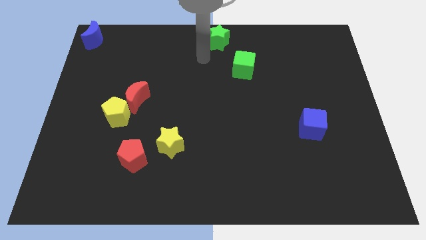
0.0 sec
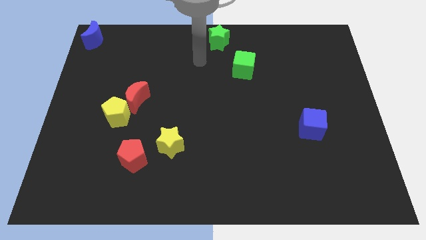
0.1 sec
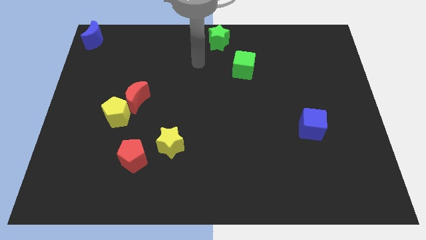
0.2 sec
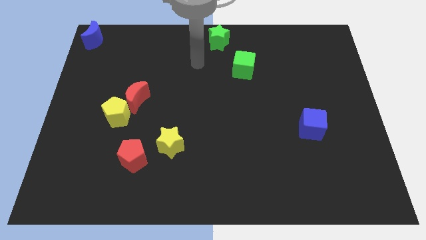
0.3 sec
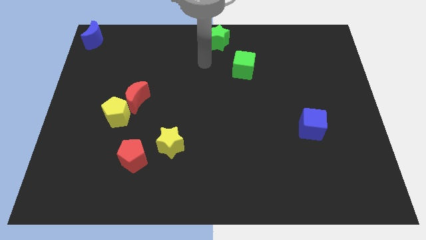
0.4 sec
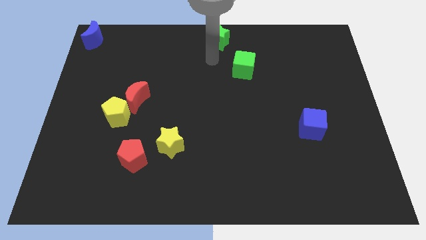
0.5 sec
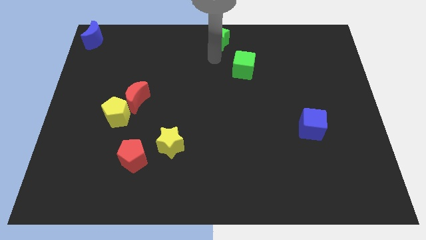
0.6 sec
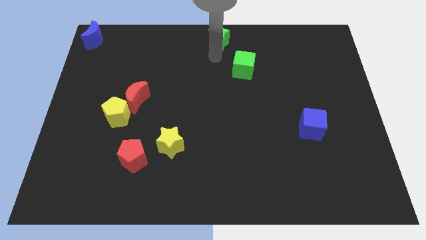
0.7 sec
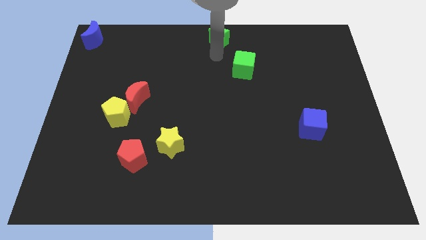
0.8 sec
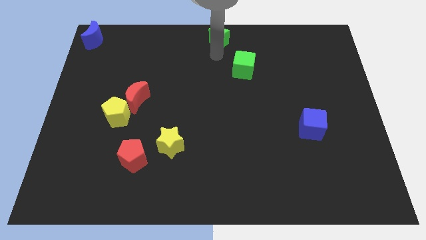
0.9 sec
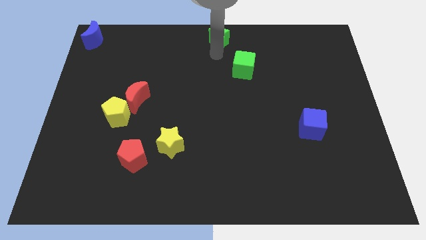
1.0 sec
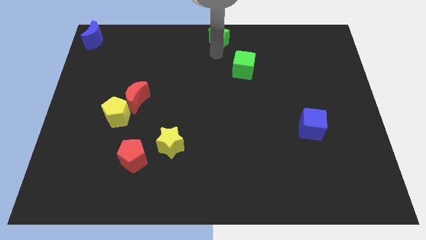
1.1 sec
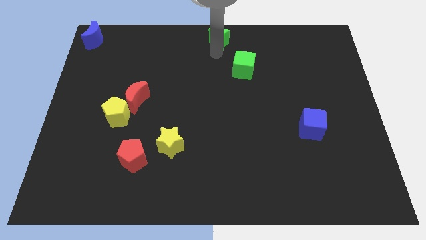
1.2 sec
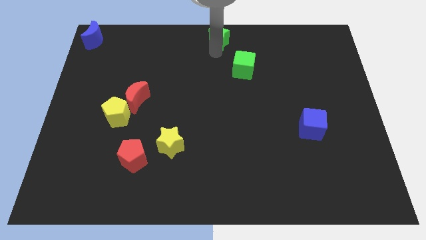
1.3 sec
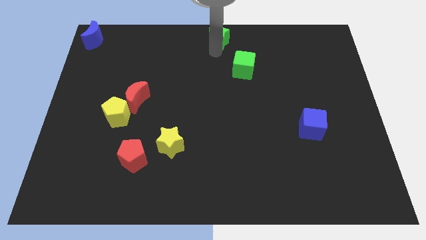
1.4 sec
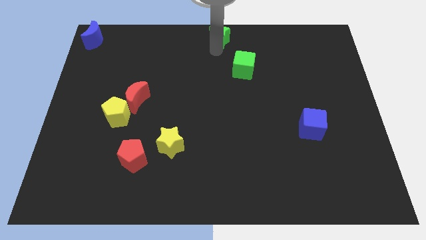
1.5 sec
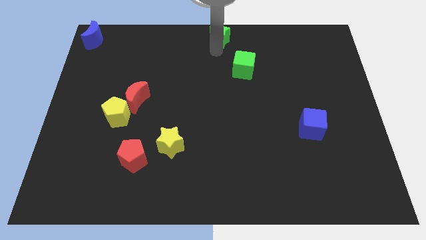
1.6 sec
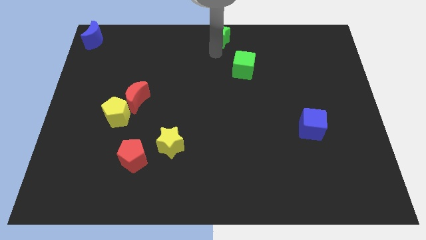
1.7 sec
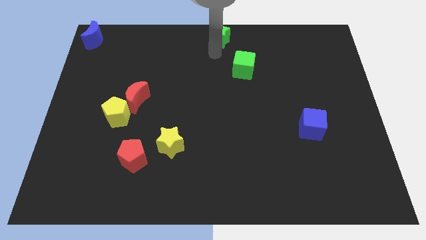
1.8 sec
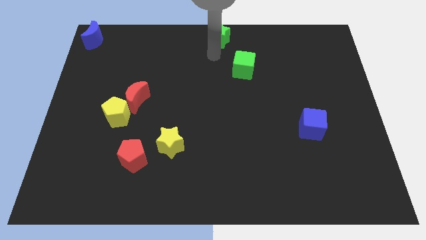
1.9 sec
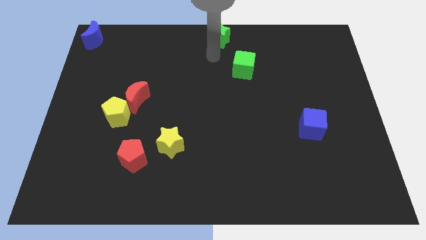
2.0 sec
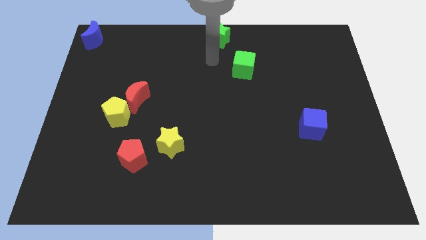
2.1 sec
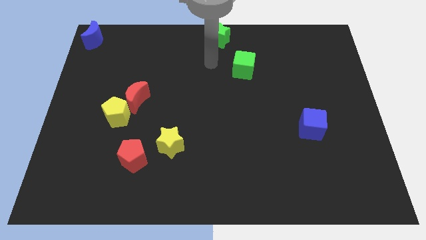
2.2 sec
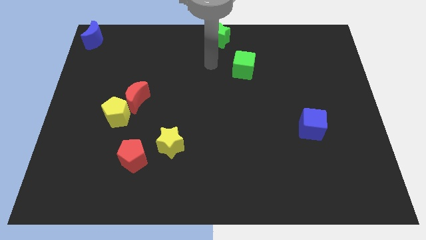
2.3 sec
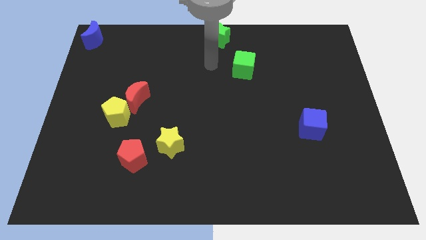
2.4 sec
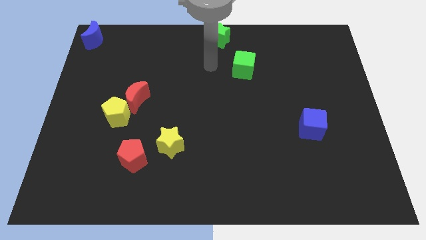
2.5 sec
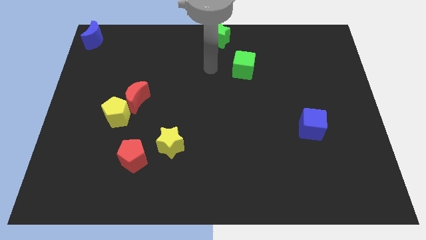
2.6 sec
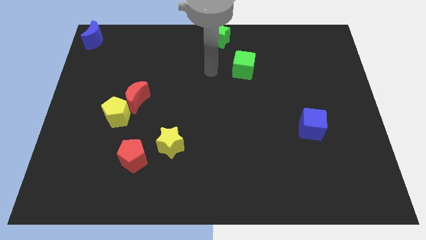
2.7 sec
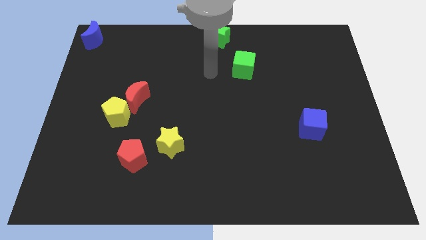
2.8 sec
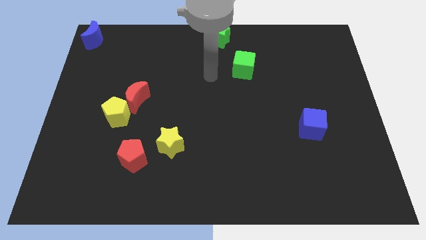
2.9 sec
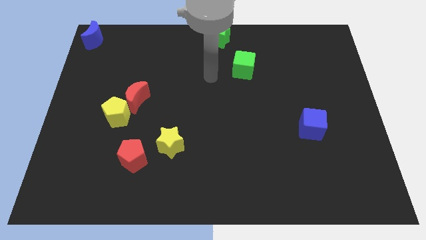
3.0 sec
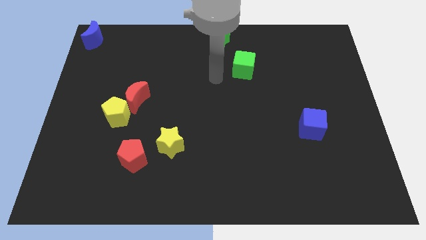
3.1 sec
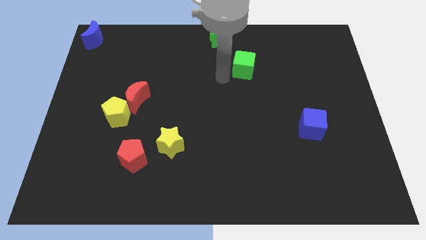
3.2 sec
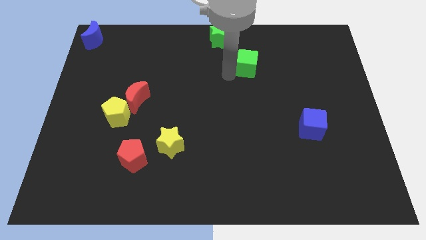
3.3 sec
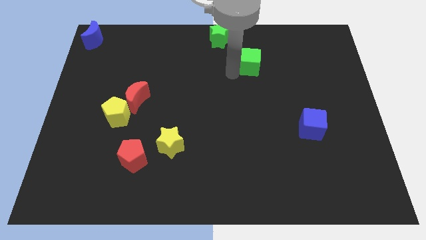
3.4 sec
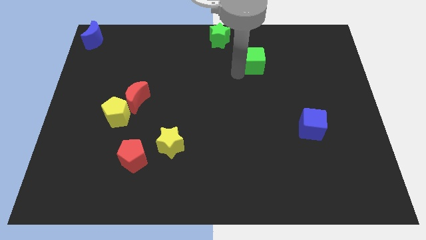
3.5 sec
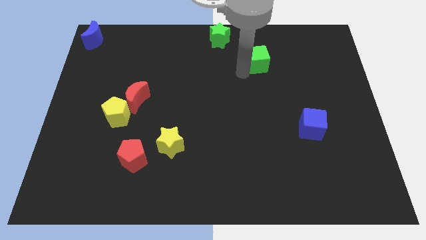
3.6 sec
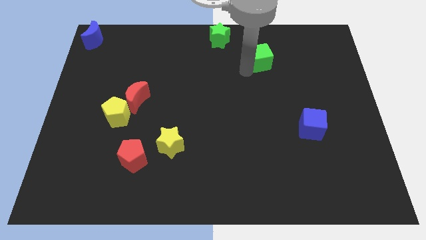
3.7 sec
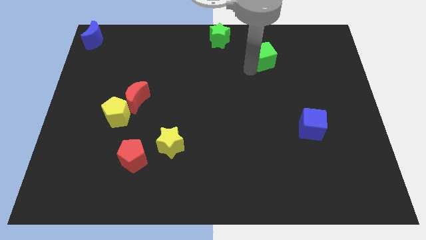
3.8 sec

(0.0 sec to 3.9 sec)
move green cube towards right

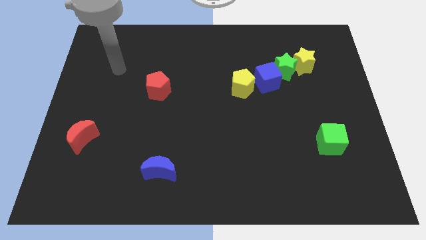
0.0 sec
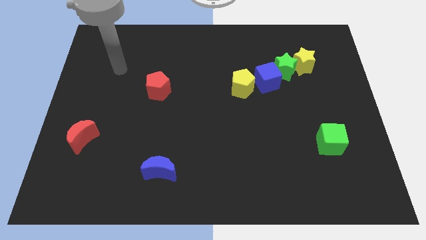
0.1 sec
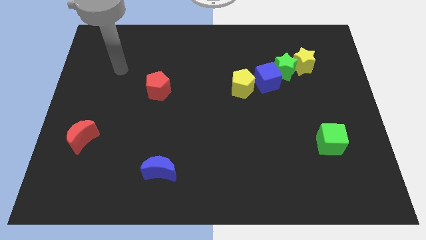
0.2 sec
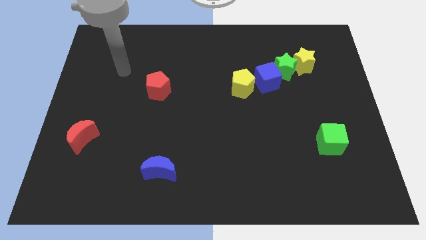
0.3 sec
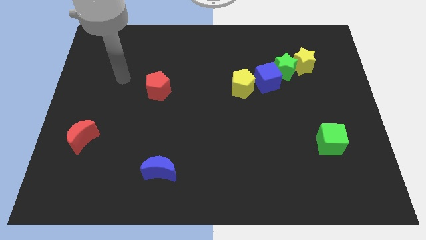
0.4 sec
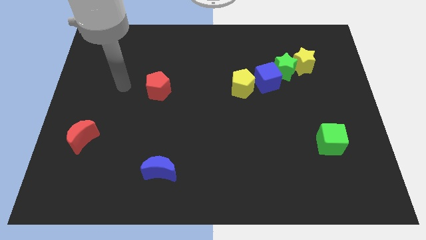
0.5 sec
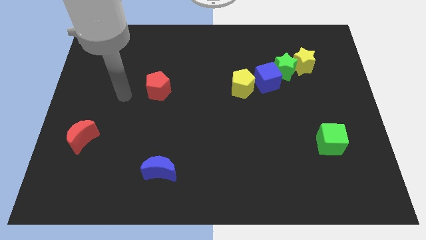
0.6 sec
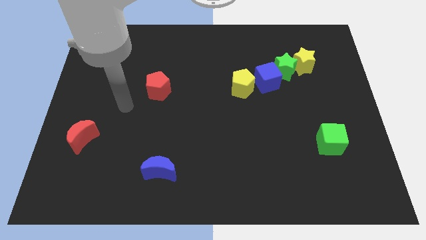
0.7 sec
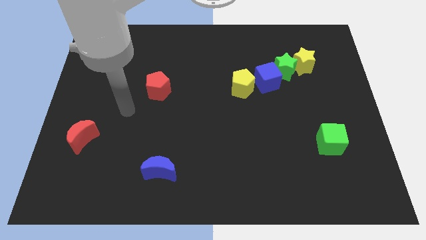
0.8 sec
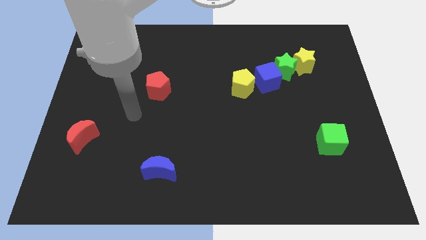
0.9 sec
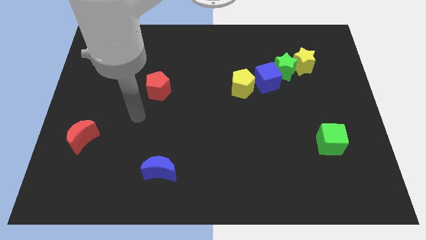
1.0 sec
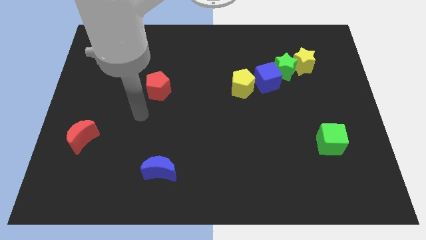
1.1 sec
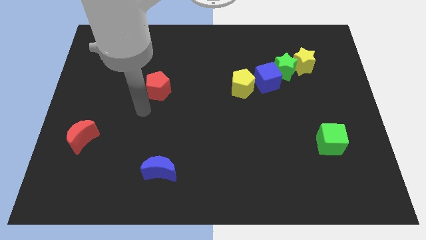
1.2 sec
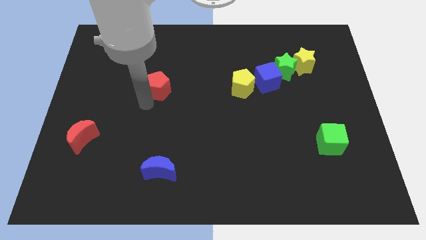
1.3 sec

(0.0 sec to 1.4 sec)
place your arm below the red pentagon

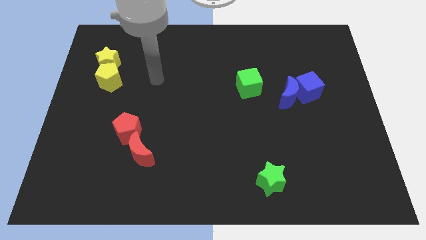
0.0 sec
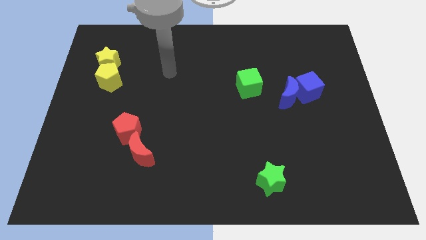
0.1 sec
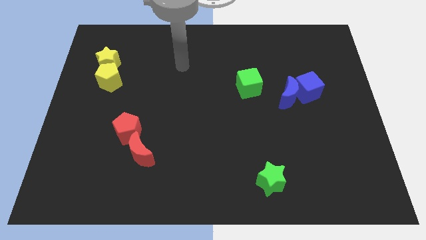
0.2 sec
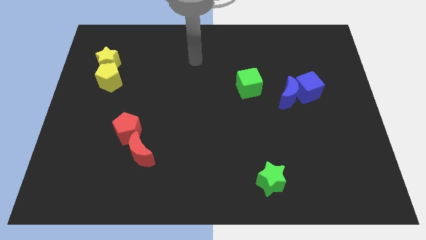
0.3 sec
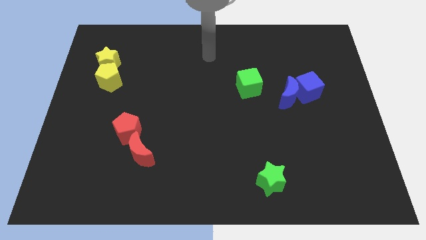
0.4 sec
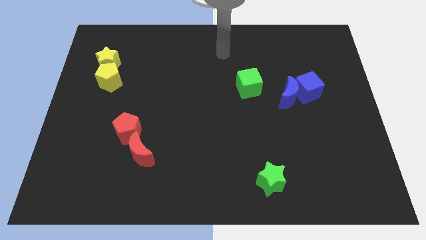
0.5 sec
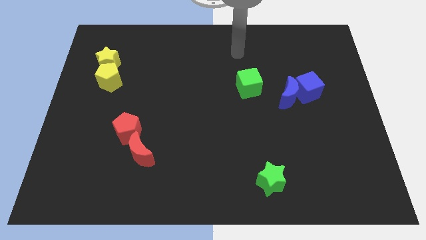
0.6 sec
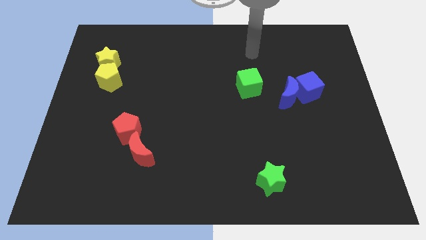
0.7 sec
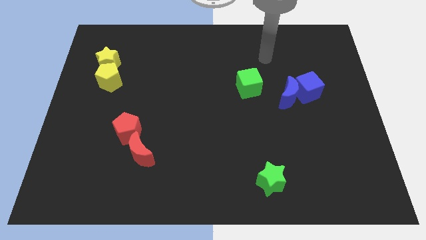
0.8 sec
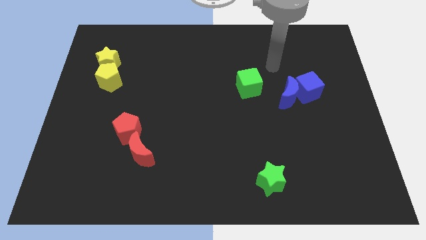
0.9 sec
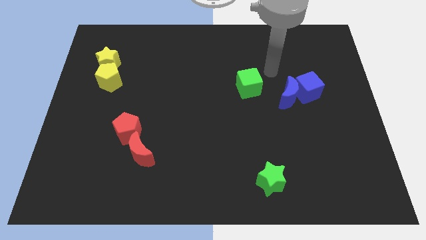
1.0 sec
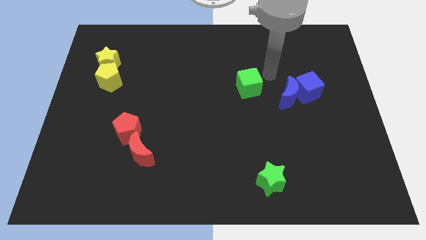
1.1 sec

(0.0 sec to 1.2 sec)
move the arm towards the green cube

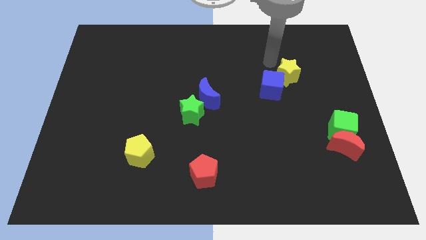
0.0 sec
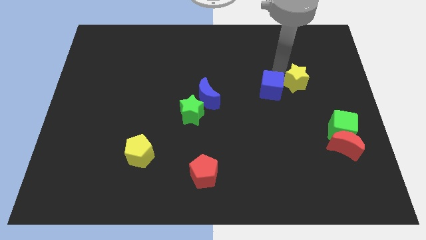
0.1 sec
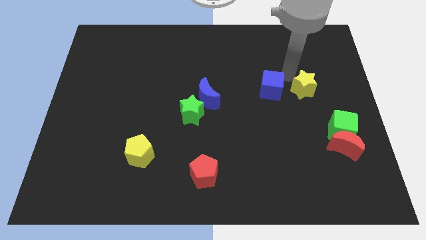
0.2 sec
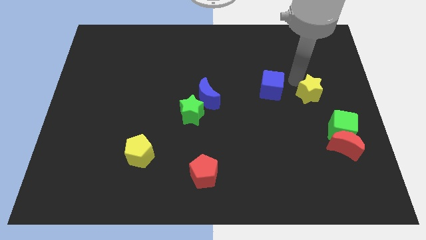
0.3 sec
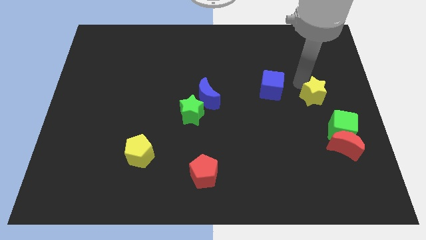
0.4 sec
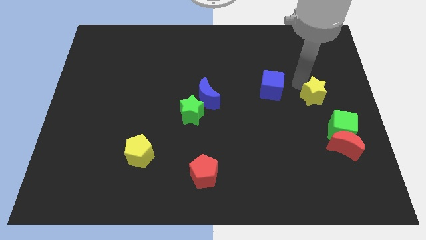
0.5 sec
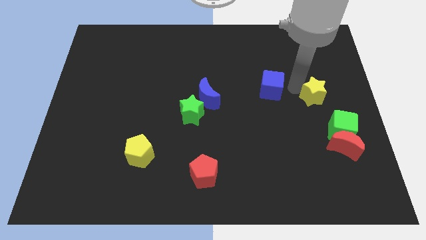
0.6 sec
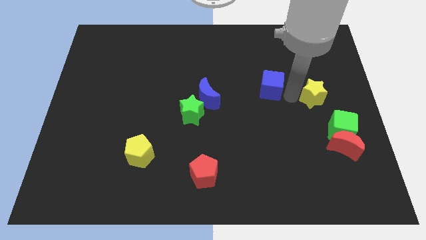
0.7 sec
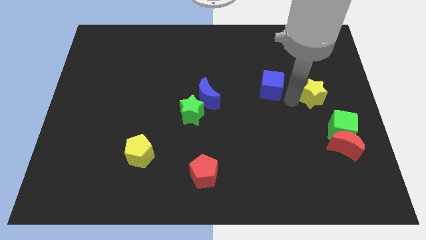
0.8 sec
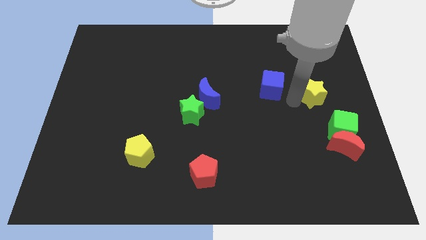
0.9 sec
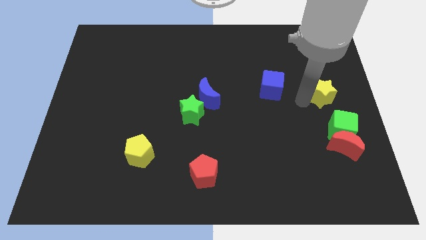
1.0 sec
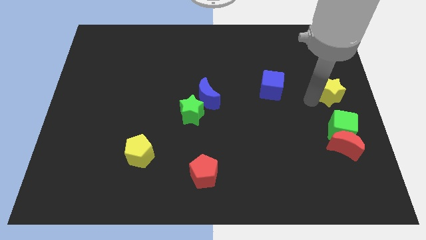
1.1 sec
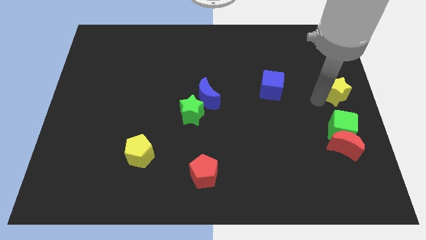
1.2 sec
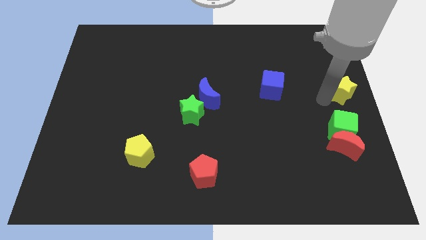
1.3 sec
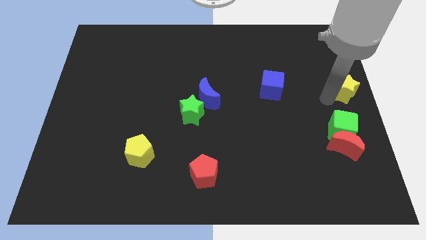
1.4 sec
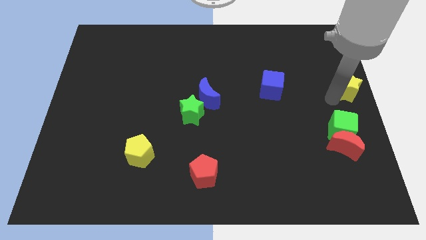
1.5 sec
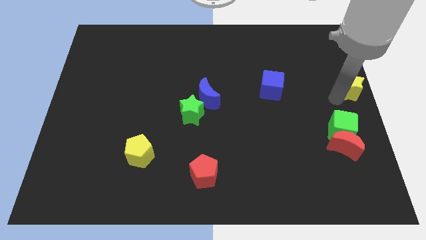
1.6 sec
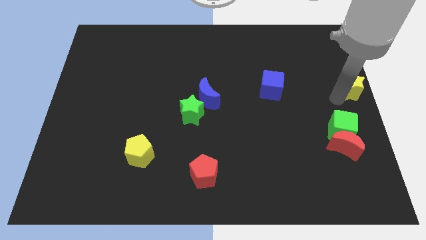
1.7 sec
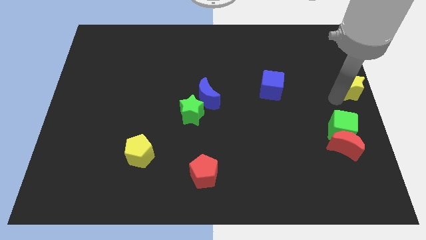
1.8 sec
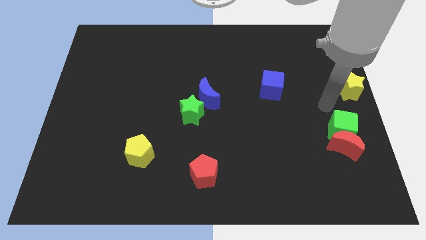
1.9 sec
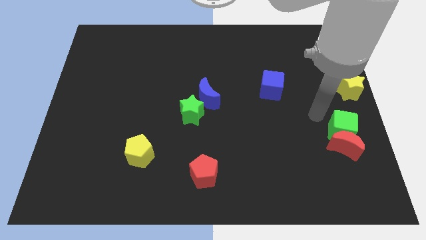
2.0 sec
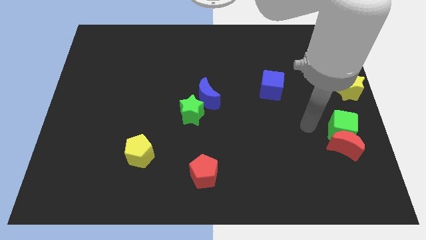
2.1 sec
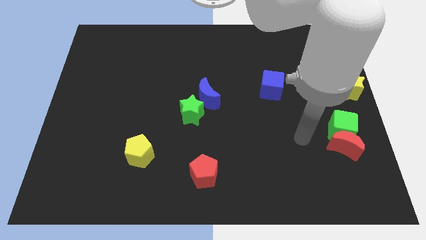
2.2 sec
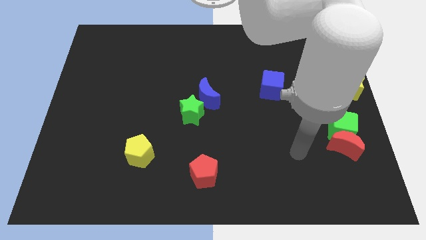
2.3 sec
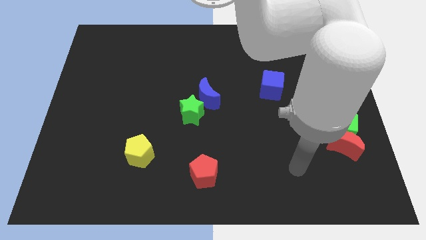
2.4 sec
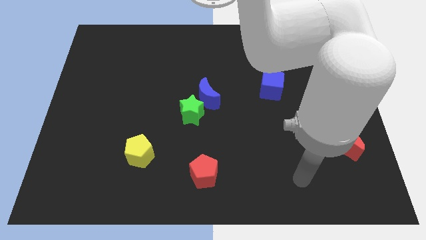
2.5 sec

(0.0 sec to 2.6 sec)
move the yellow star to the top of the green cube
